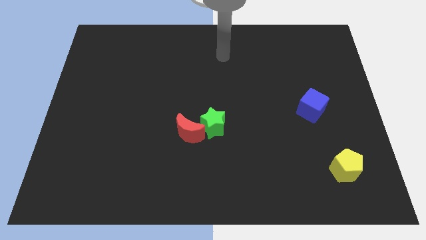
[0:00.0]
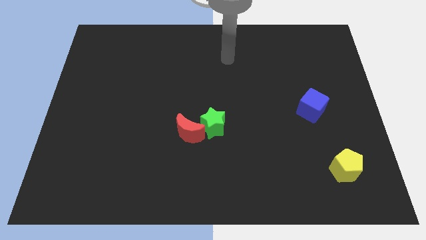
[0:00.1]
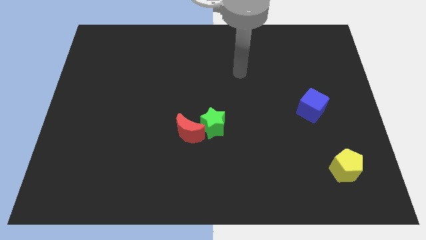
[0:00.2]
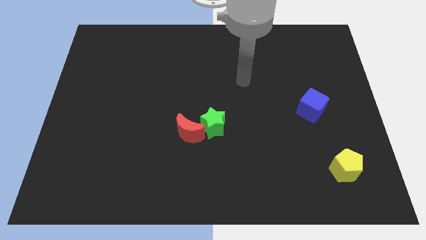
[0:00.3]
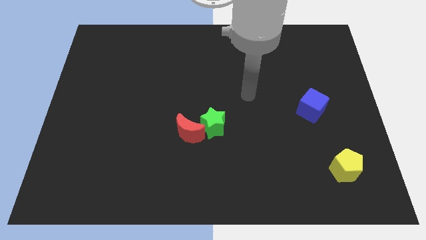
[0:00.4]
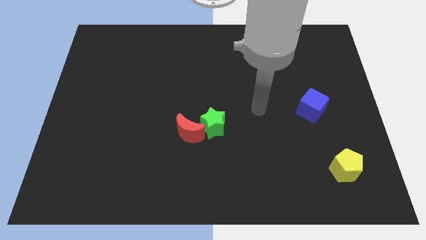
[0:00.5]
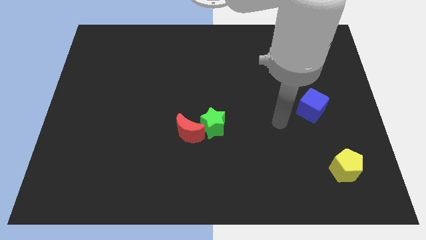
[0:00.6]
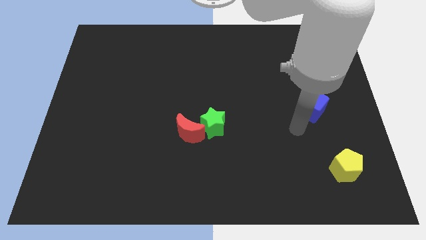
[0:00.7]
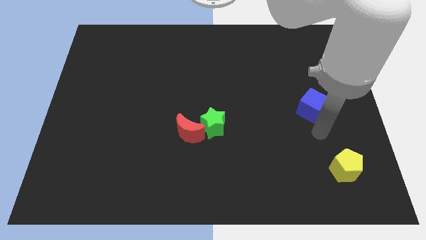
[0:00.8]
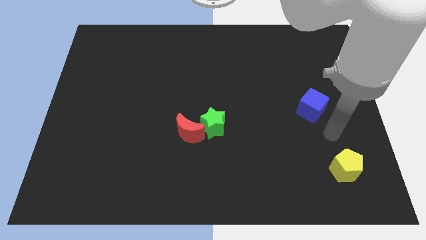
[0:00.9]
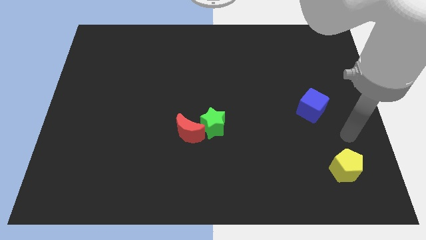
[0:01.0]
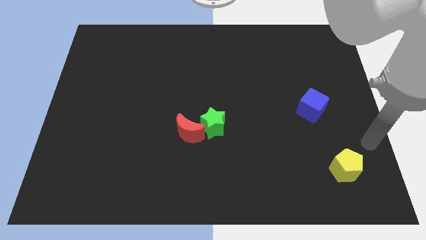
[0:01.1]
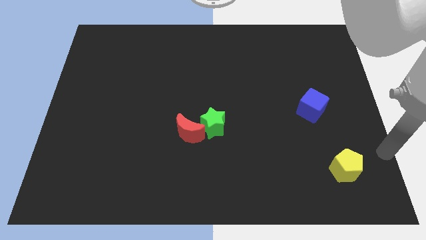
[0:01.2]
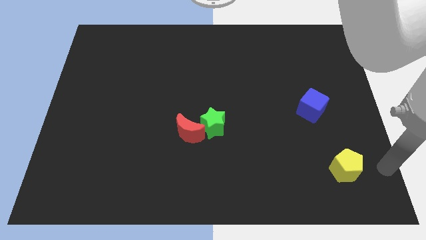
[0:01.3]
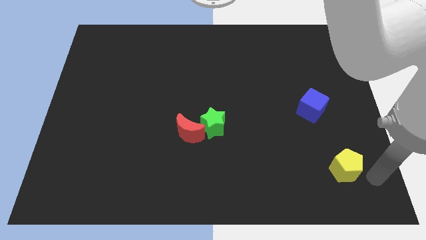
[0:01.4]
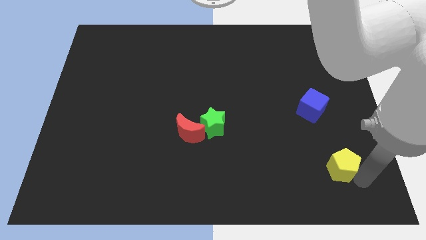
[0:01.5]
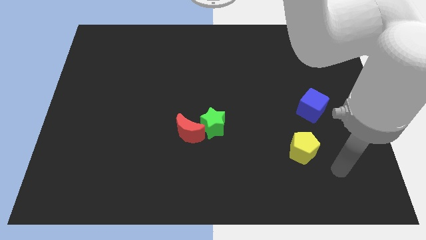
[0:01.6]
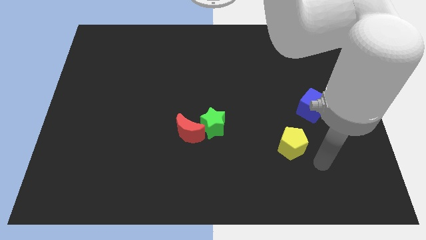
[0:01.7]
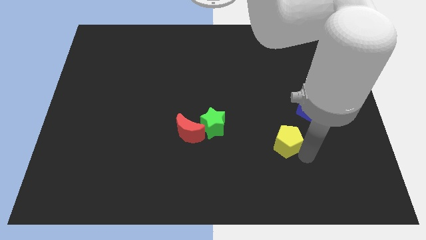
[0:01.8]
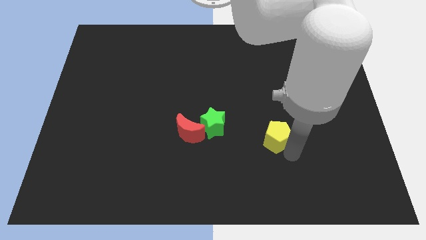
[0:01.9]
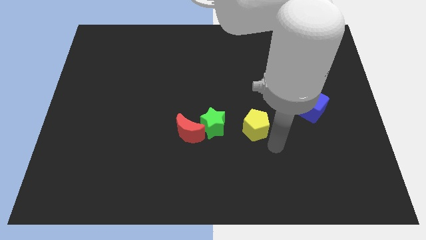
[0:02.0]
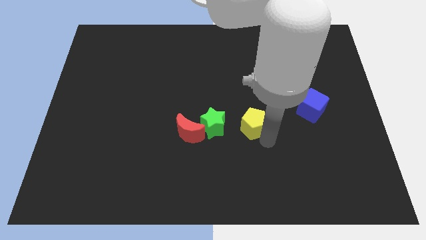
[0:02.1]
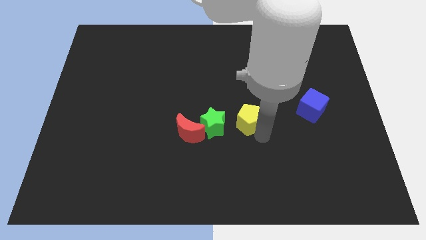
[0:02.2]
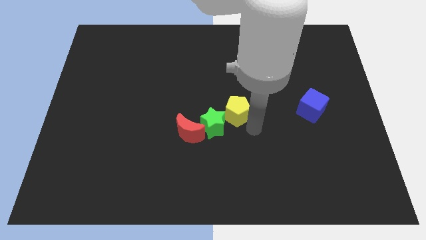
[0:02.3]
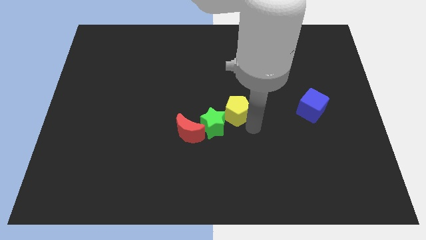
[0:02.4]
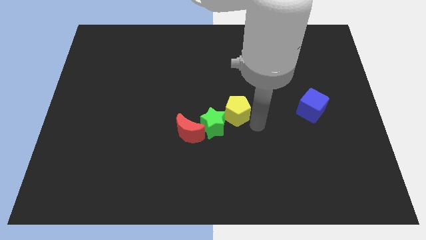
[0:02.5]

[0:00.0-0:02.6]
move the pentagon close to the green block

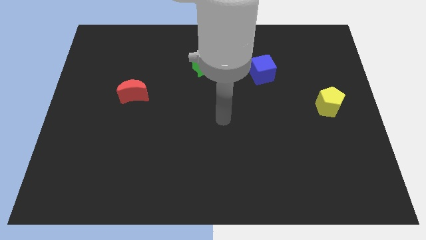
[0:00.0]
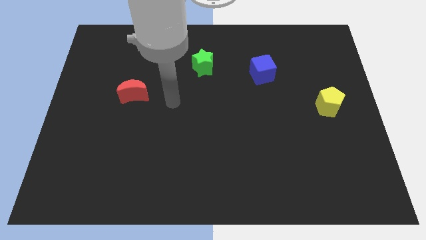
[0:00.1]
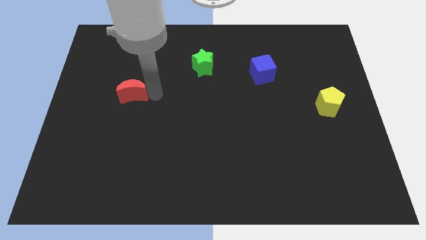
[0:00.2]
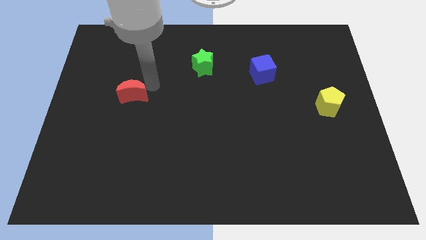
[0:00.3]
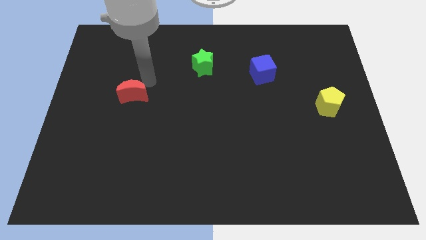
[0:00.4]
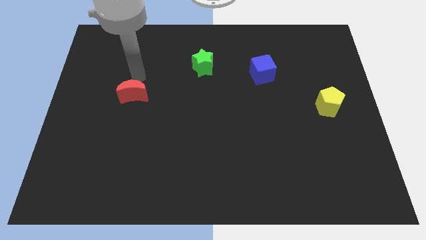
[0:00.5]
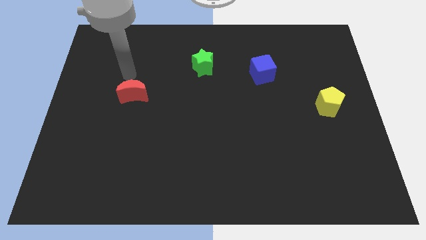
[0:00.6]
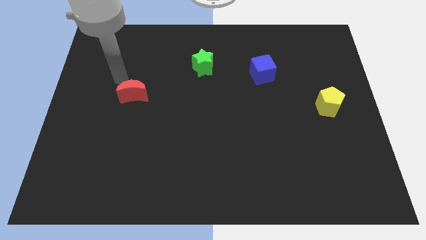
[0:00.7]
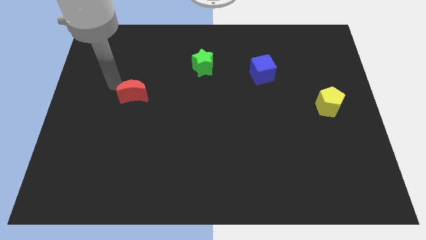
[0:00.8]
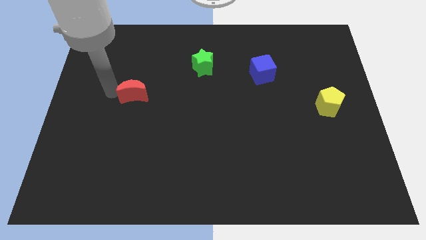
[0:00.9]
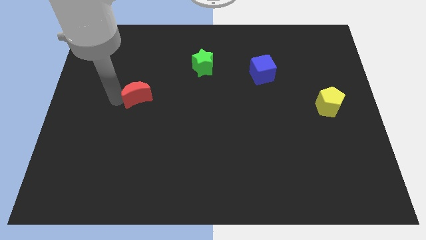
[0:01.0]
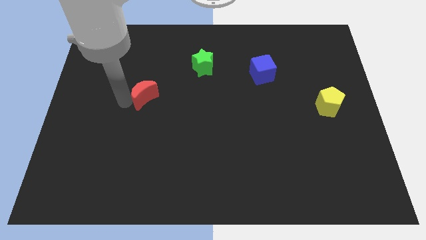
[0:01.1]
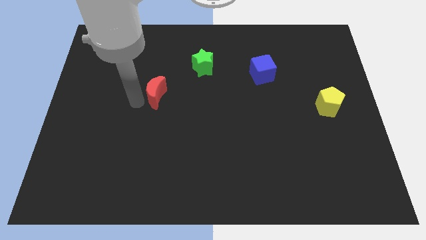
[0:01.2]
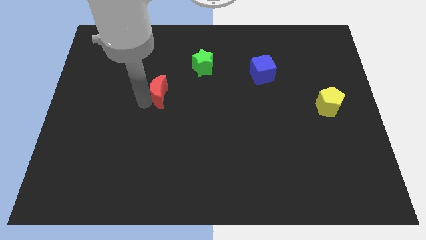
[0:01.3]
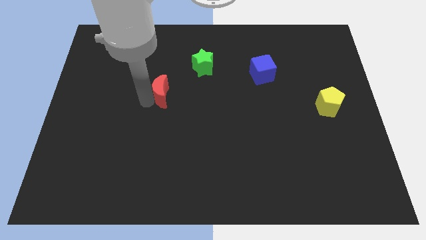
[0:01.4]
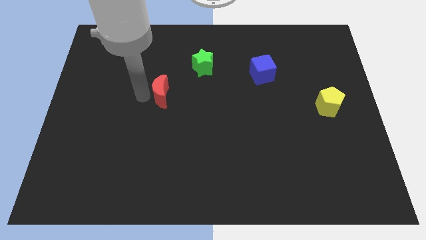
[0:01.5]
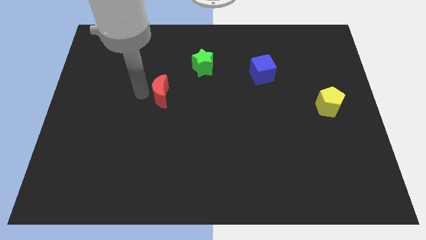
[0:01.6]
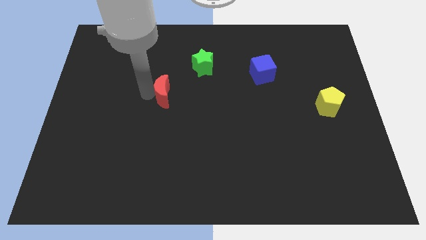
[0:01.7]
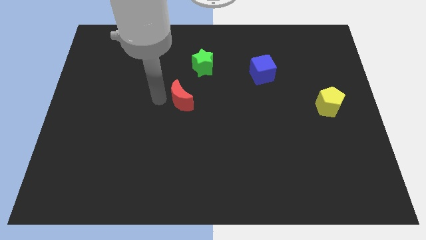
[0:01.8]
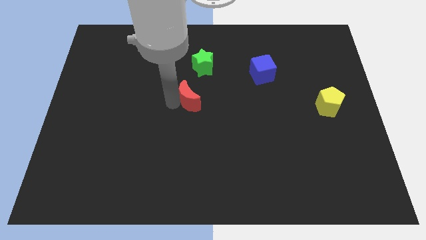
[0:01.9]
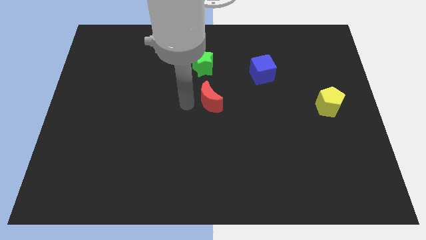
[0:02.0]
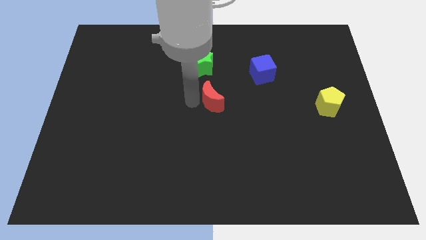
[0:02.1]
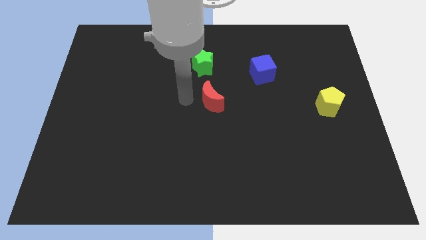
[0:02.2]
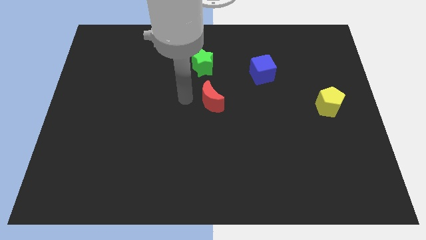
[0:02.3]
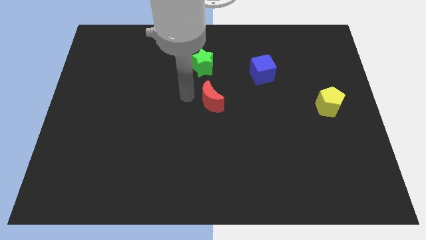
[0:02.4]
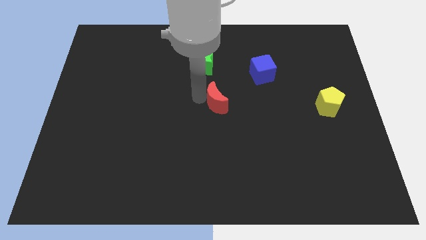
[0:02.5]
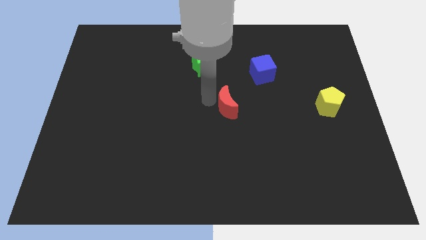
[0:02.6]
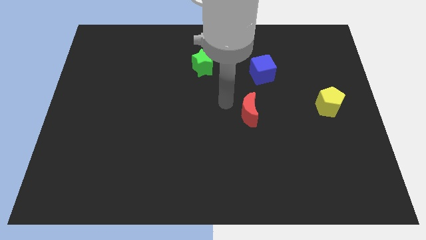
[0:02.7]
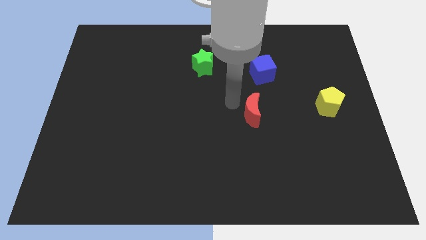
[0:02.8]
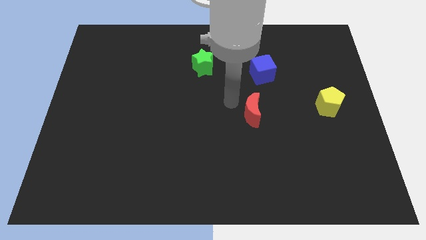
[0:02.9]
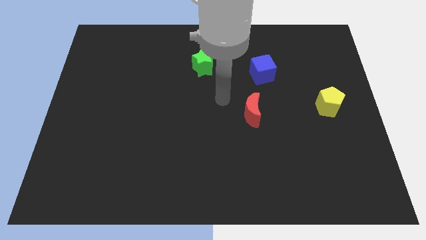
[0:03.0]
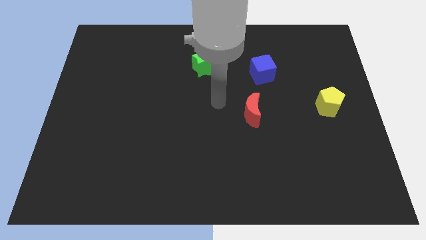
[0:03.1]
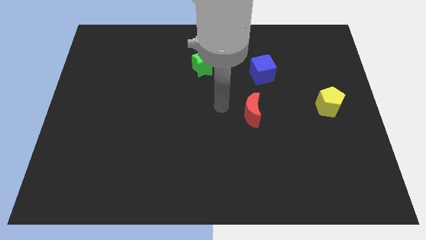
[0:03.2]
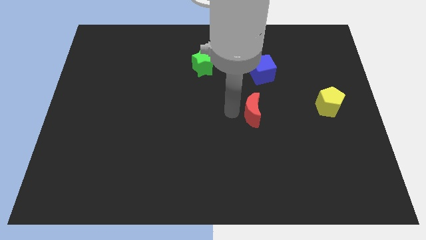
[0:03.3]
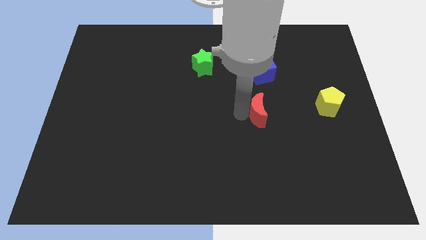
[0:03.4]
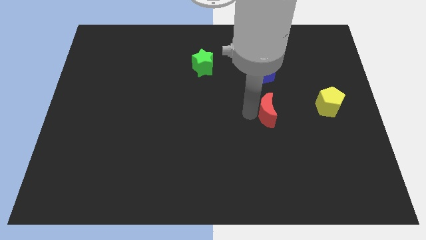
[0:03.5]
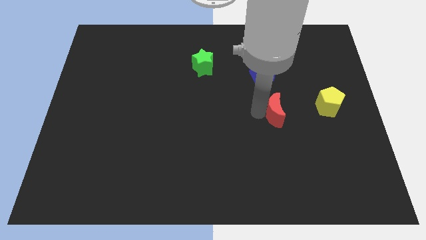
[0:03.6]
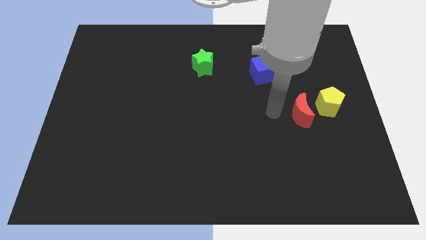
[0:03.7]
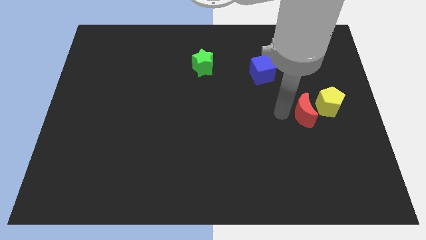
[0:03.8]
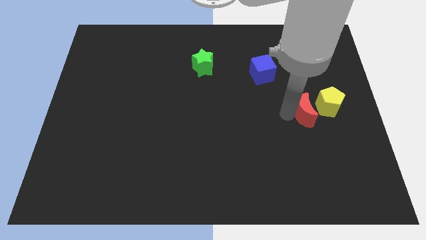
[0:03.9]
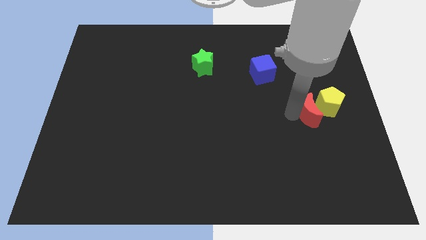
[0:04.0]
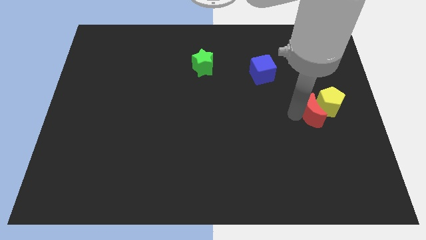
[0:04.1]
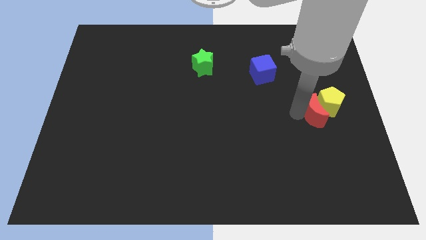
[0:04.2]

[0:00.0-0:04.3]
push the red block next to the pentagon

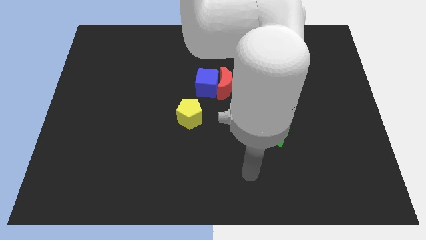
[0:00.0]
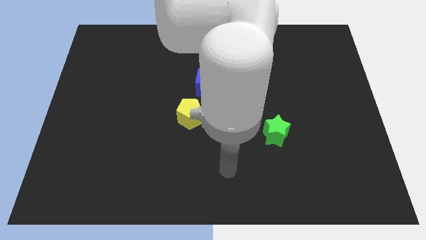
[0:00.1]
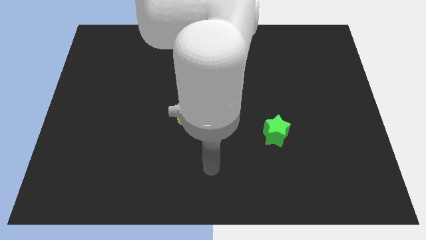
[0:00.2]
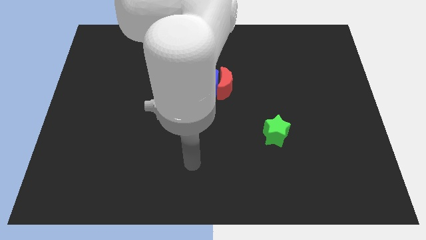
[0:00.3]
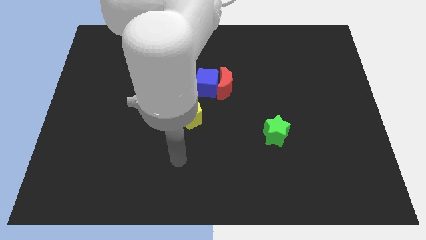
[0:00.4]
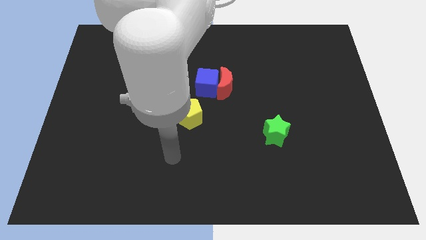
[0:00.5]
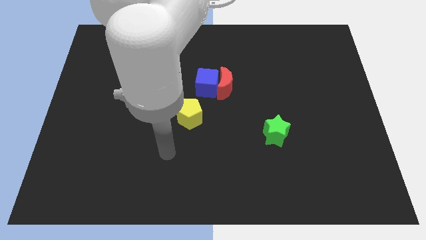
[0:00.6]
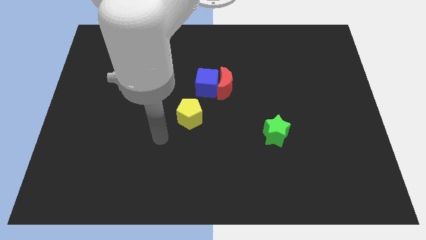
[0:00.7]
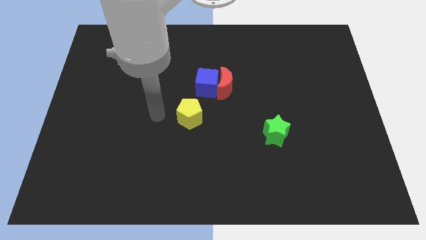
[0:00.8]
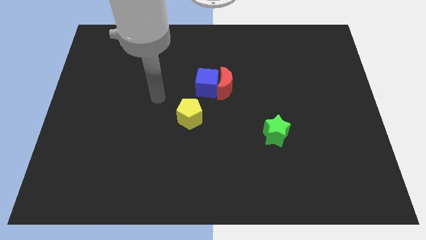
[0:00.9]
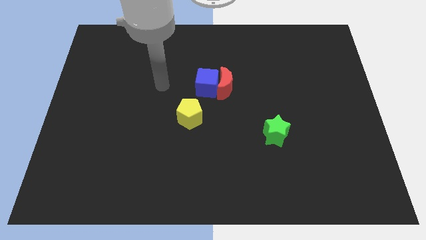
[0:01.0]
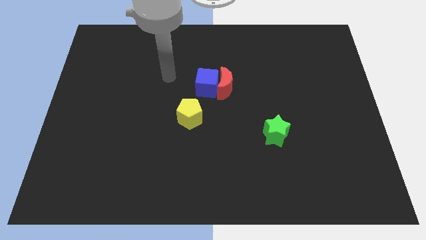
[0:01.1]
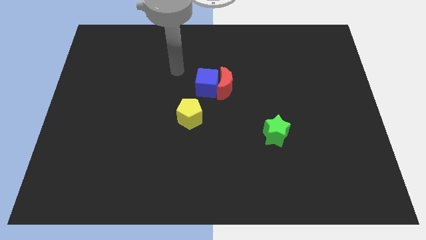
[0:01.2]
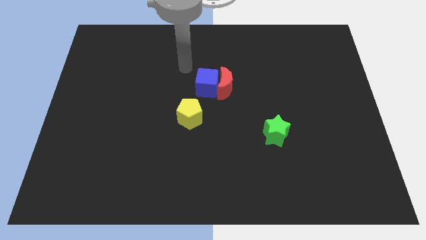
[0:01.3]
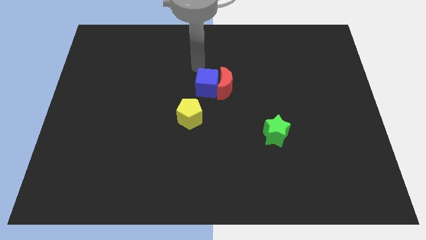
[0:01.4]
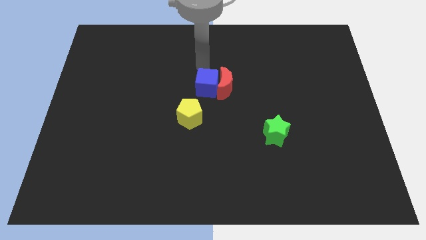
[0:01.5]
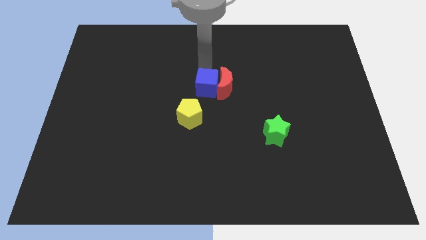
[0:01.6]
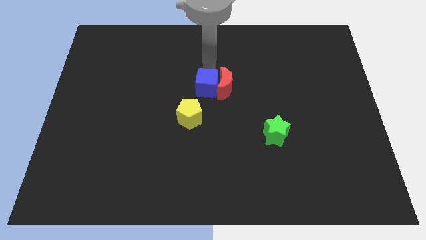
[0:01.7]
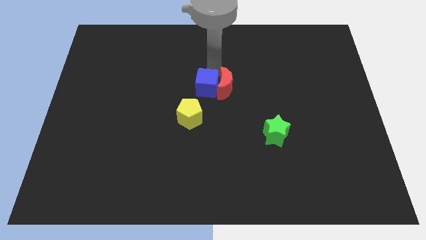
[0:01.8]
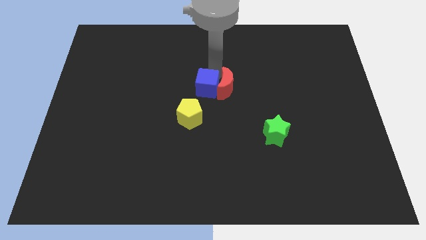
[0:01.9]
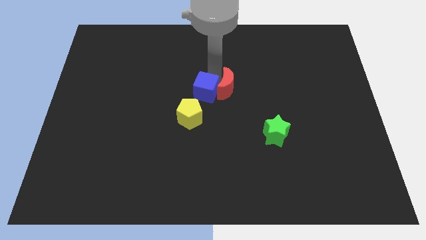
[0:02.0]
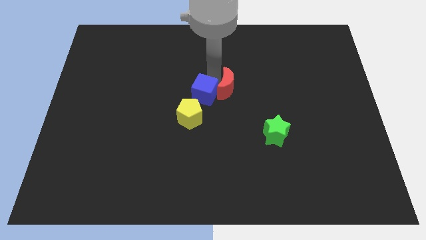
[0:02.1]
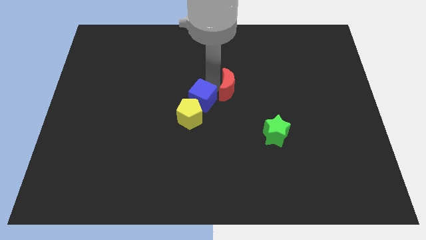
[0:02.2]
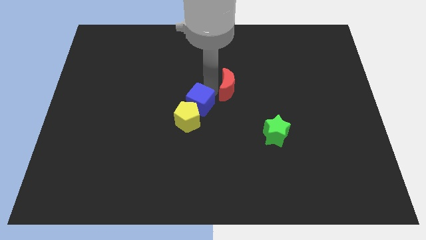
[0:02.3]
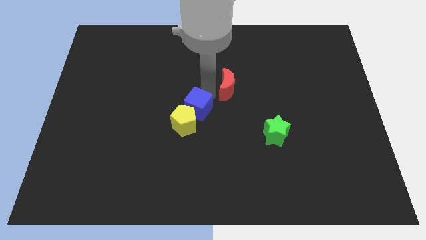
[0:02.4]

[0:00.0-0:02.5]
slide the blue block next to the yellow pentagon
